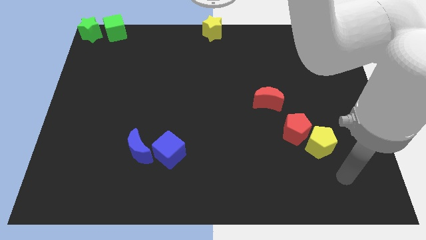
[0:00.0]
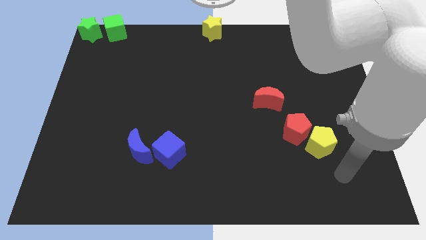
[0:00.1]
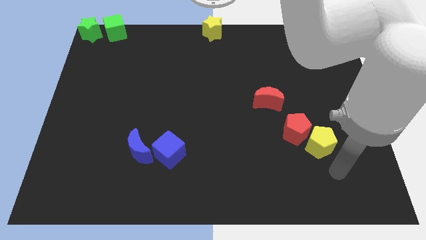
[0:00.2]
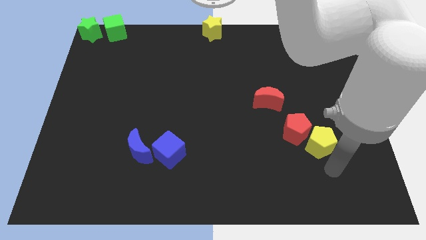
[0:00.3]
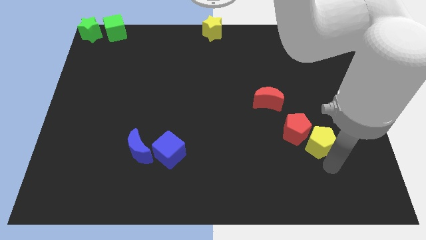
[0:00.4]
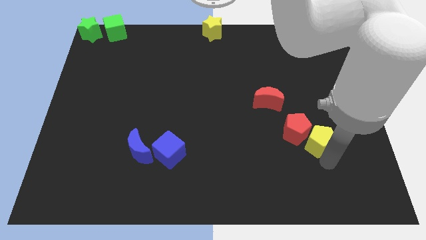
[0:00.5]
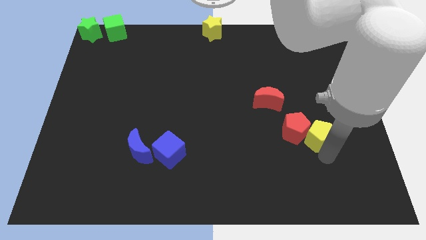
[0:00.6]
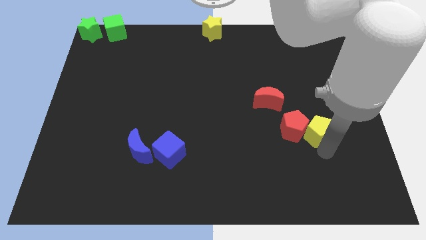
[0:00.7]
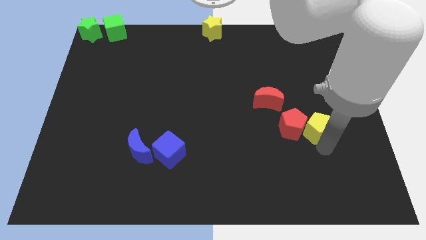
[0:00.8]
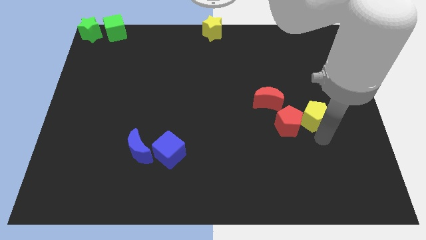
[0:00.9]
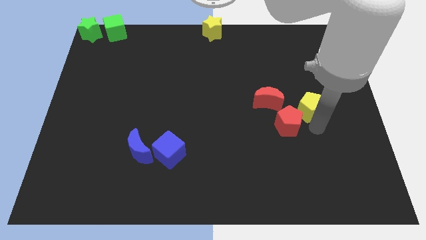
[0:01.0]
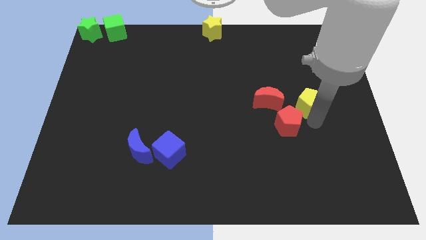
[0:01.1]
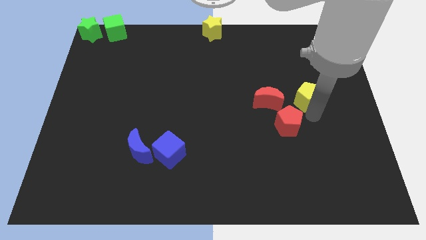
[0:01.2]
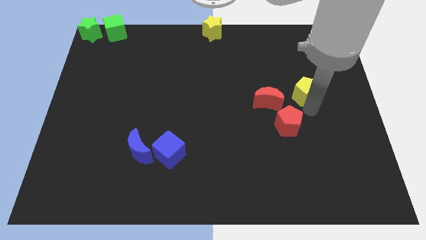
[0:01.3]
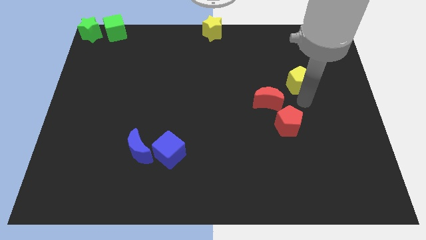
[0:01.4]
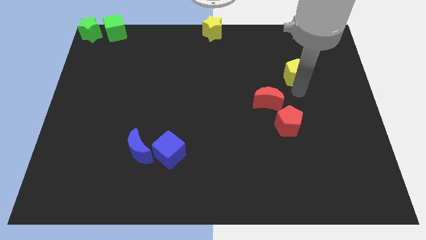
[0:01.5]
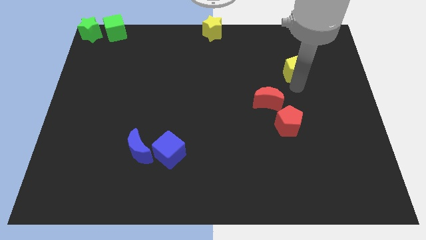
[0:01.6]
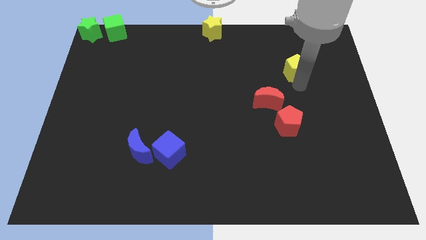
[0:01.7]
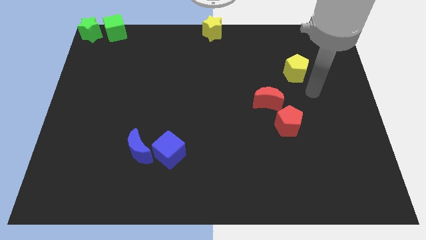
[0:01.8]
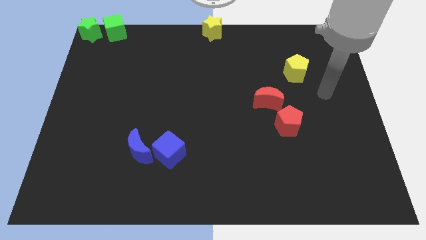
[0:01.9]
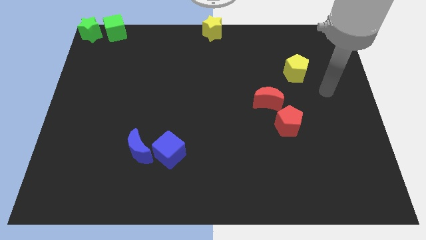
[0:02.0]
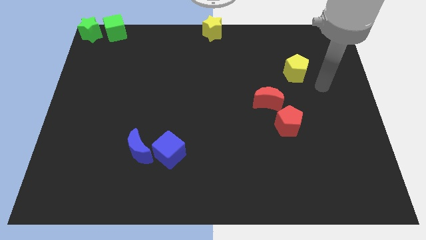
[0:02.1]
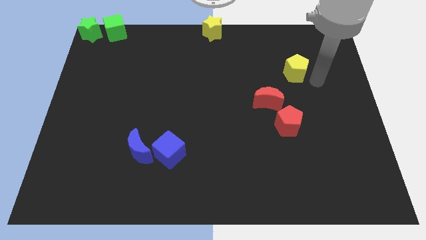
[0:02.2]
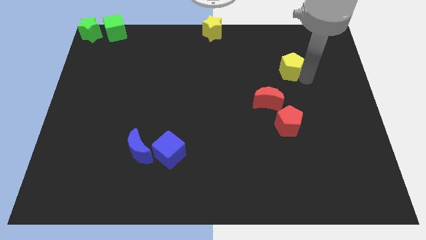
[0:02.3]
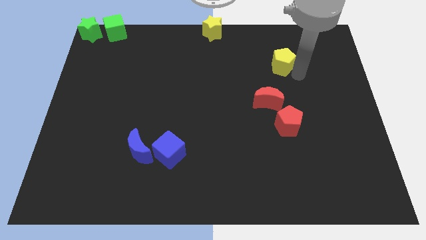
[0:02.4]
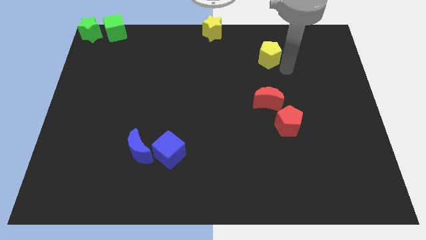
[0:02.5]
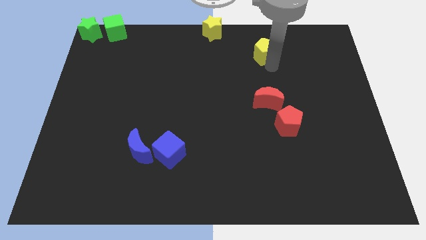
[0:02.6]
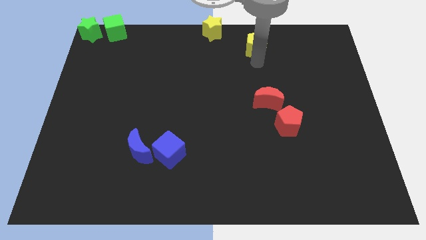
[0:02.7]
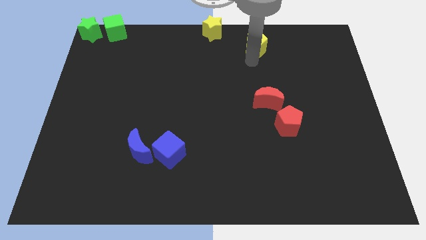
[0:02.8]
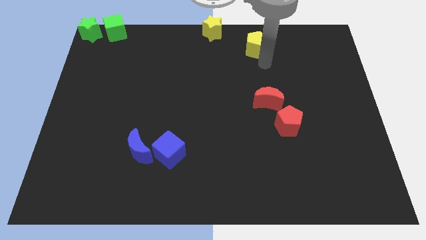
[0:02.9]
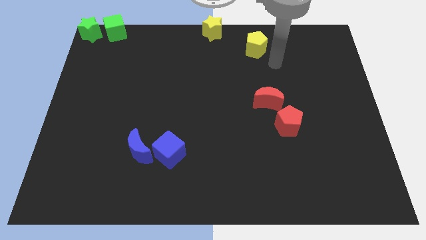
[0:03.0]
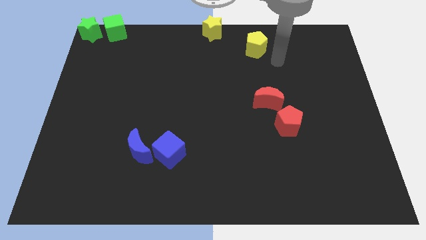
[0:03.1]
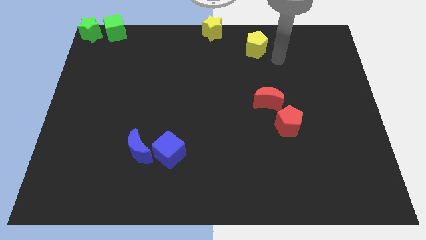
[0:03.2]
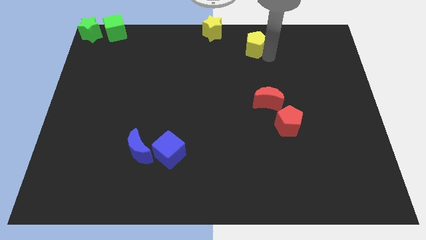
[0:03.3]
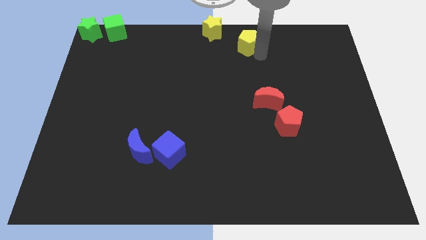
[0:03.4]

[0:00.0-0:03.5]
separate the yellow pentagon from the red pentagon

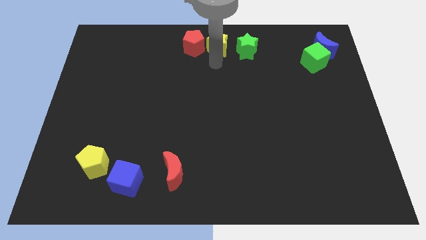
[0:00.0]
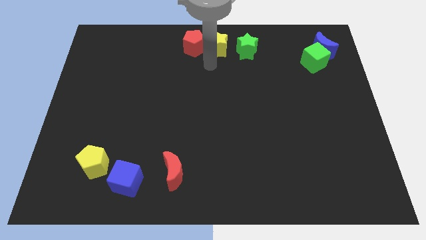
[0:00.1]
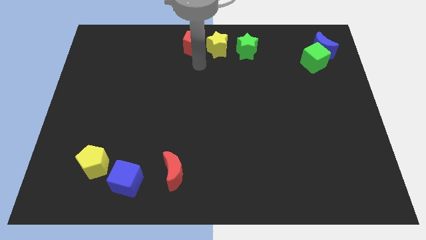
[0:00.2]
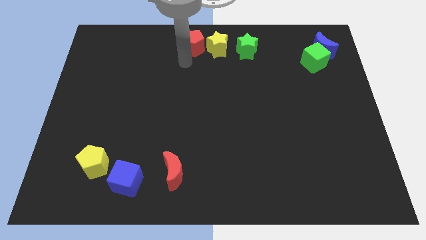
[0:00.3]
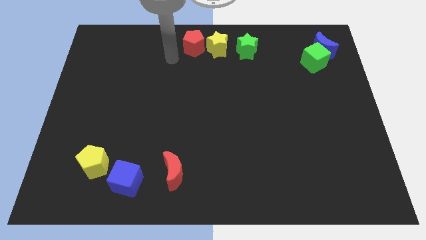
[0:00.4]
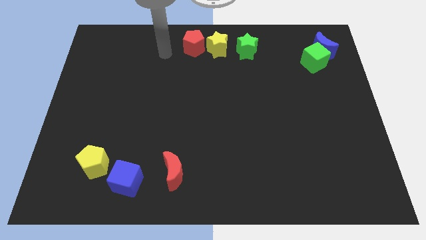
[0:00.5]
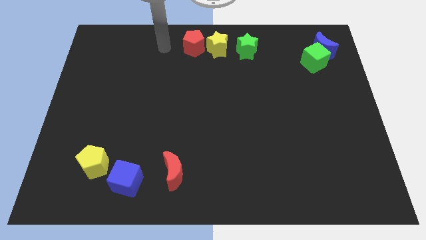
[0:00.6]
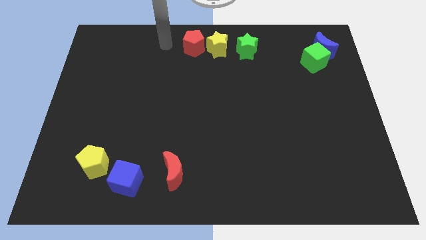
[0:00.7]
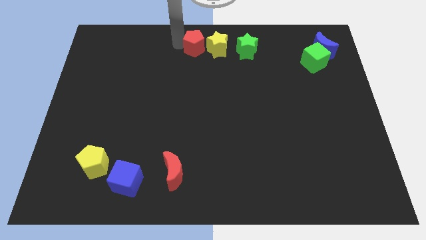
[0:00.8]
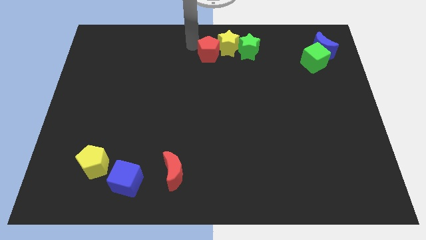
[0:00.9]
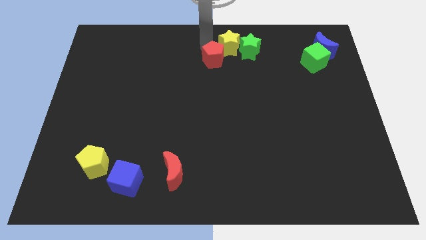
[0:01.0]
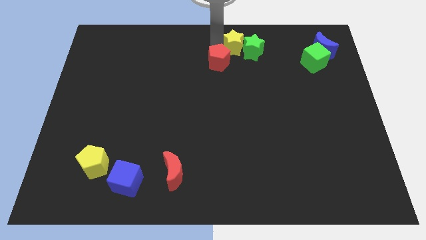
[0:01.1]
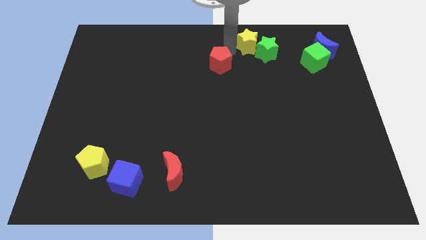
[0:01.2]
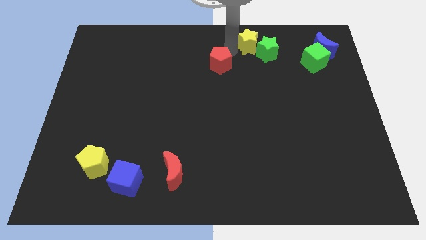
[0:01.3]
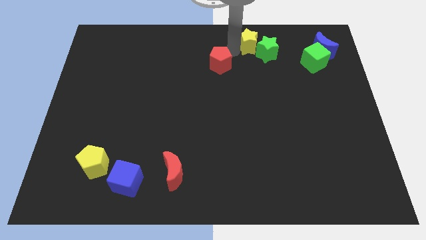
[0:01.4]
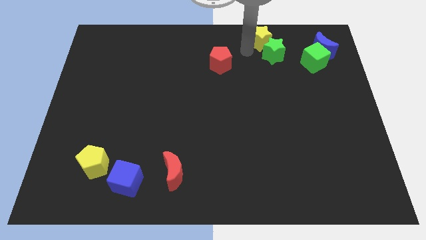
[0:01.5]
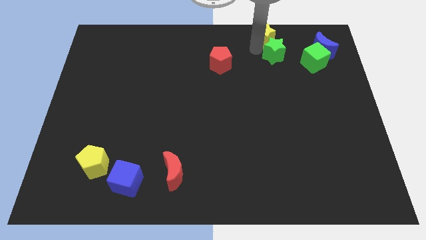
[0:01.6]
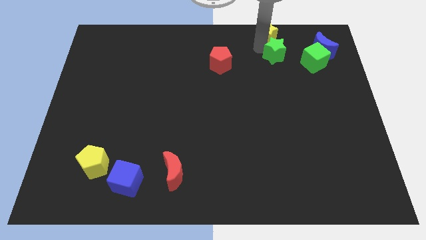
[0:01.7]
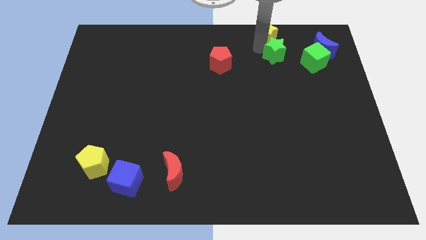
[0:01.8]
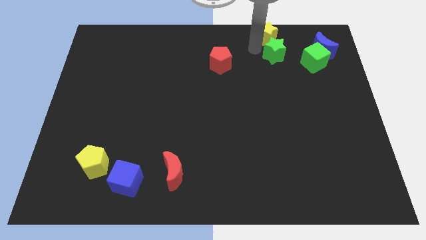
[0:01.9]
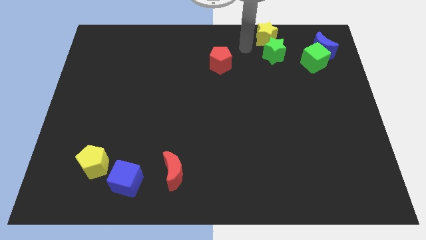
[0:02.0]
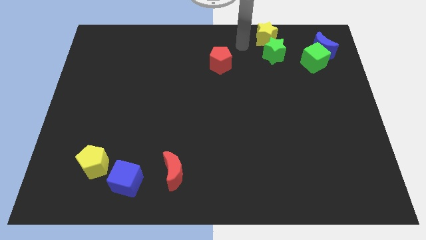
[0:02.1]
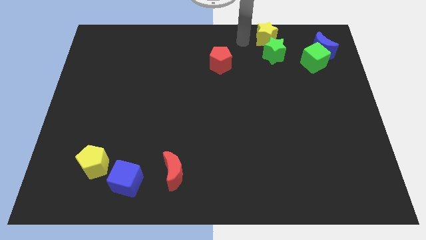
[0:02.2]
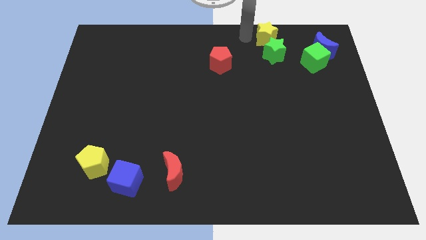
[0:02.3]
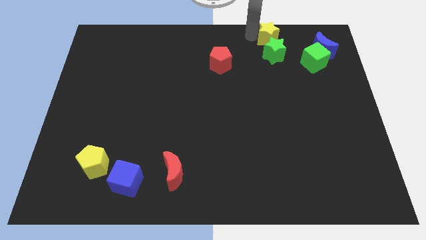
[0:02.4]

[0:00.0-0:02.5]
place the yellow star above the green star

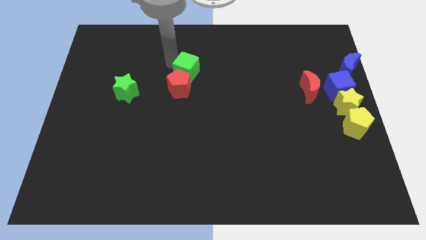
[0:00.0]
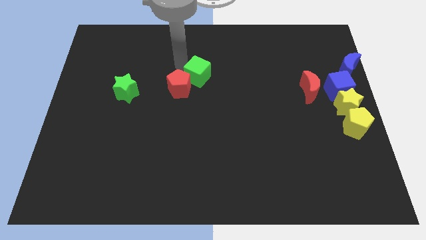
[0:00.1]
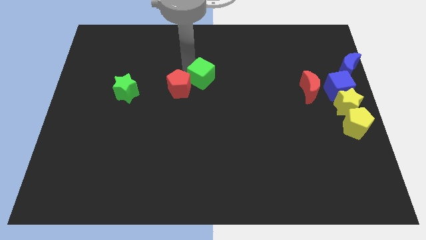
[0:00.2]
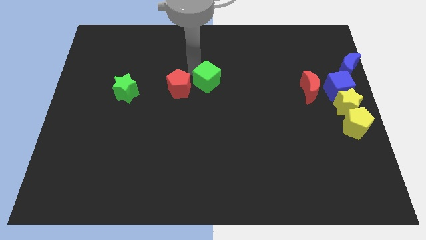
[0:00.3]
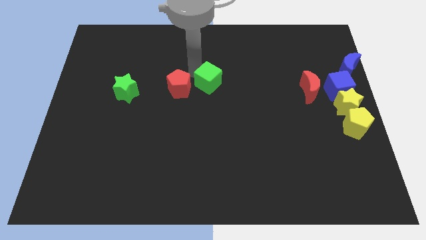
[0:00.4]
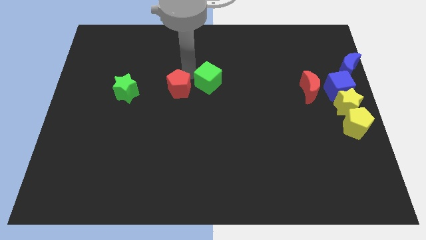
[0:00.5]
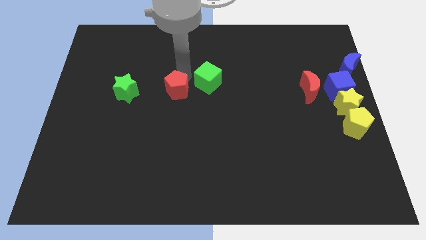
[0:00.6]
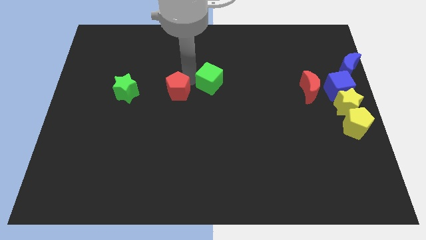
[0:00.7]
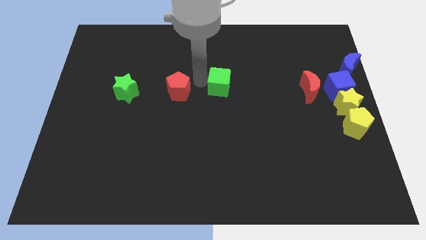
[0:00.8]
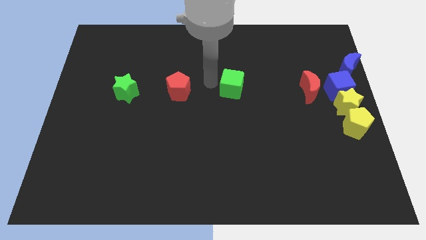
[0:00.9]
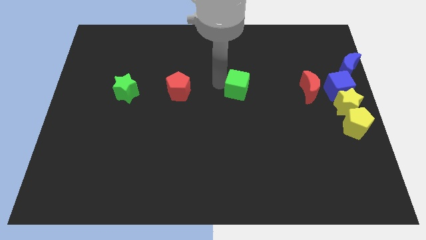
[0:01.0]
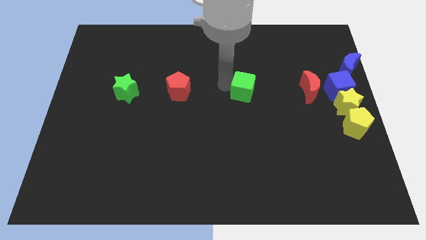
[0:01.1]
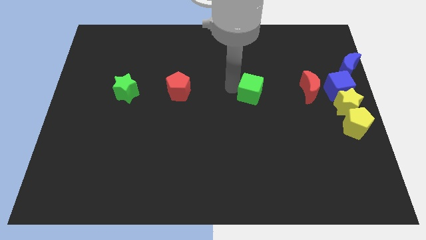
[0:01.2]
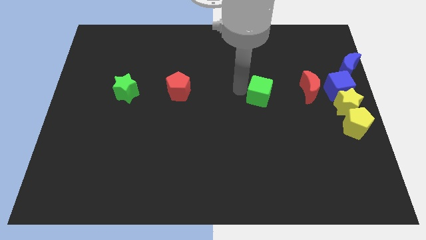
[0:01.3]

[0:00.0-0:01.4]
place green block beside red moon to form a line

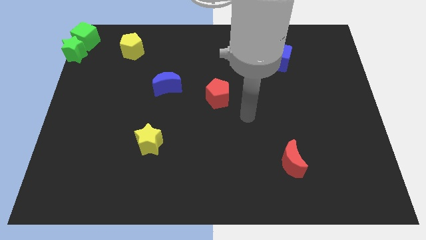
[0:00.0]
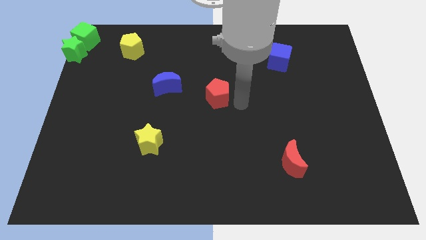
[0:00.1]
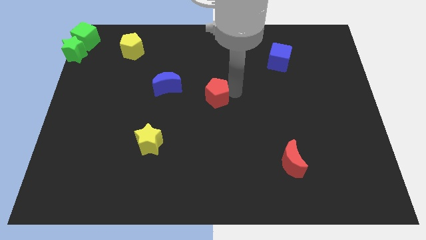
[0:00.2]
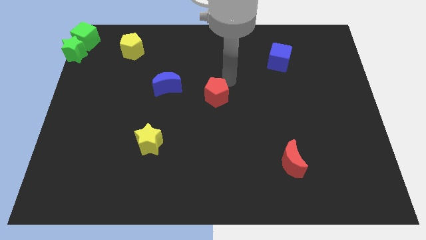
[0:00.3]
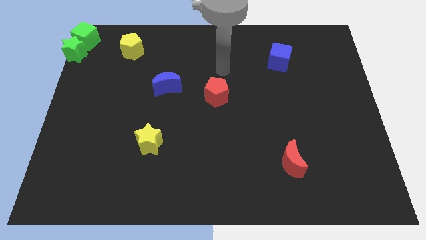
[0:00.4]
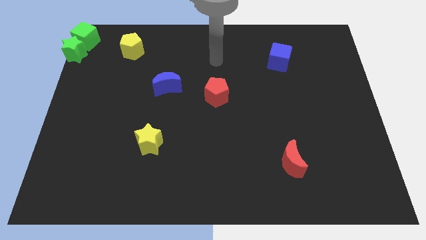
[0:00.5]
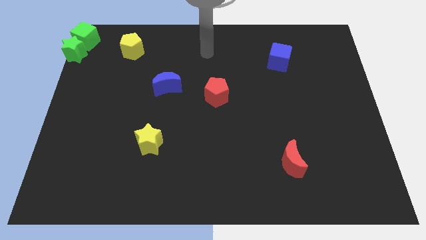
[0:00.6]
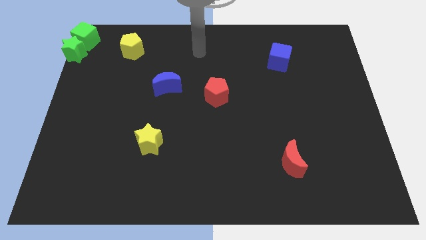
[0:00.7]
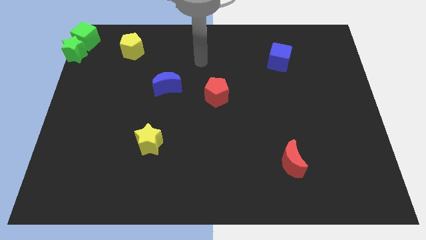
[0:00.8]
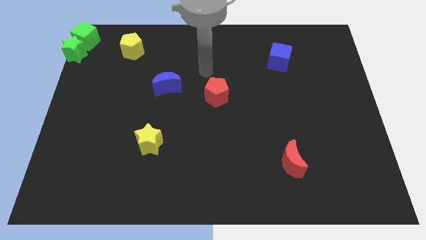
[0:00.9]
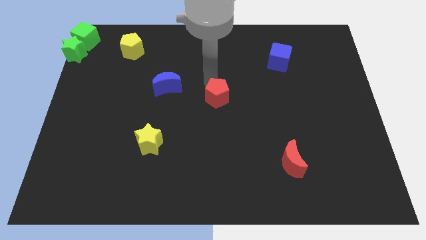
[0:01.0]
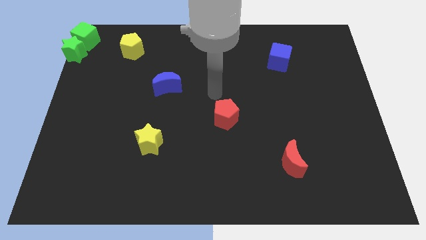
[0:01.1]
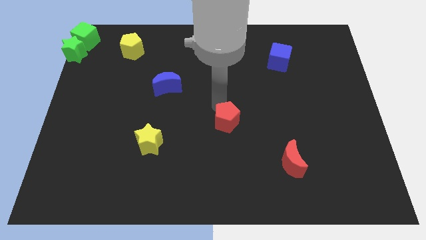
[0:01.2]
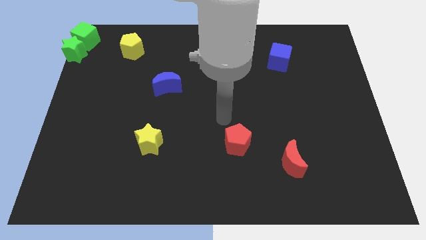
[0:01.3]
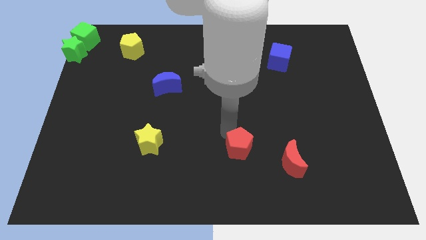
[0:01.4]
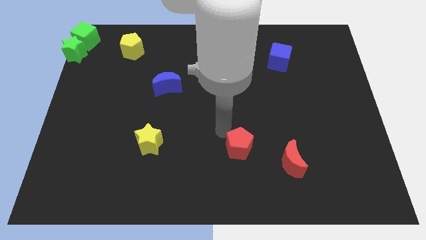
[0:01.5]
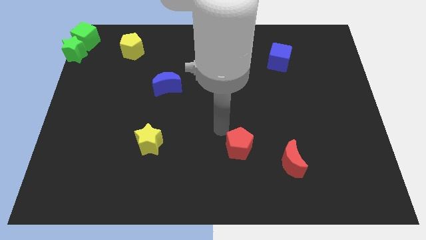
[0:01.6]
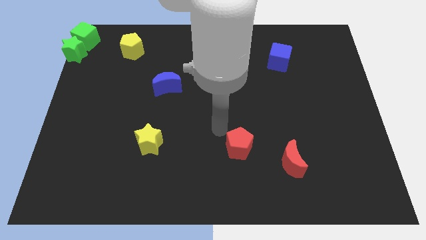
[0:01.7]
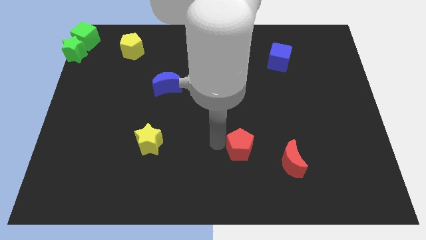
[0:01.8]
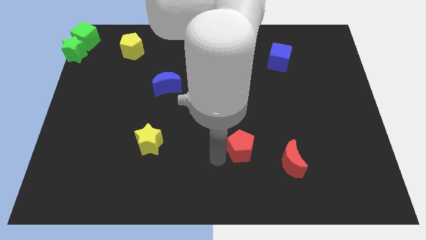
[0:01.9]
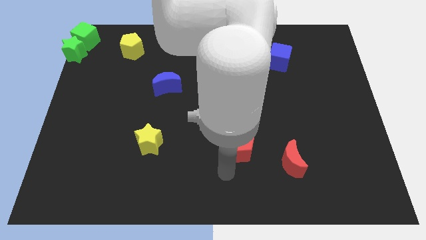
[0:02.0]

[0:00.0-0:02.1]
push the red pentagon diagonally to the red crescent
